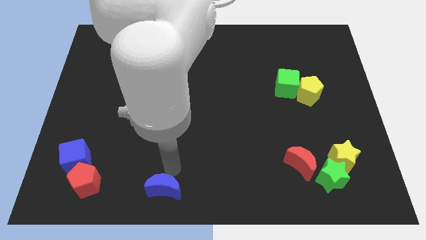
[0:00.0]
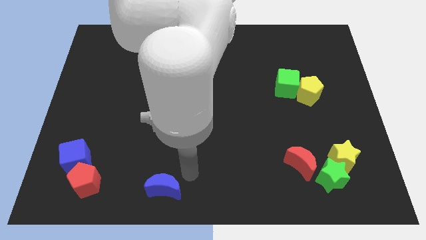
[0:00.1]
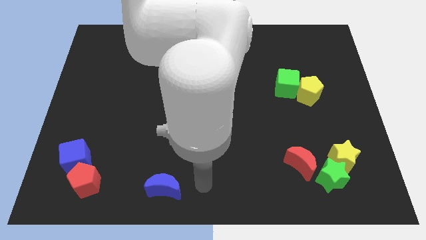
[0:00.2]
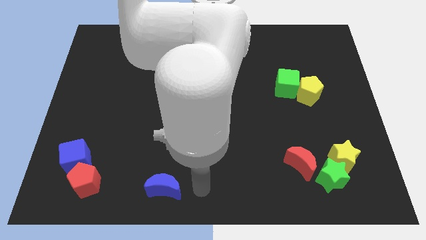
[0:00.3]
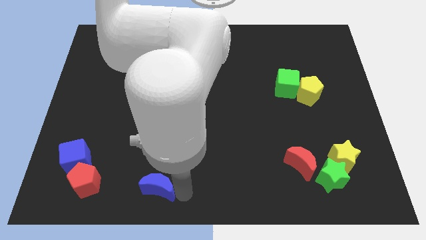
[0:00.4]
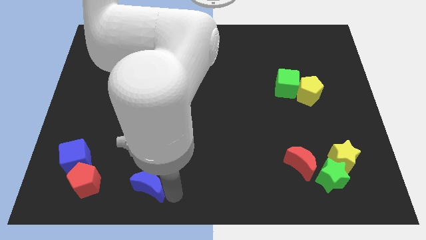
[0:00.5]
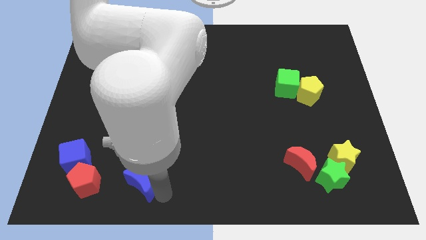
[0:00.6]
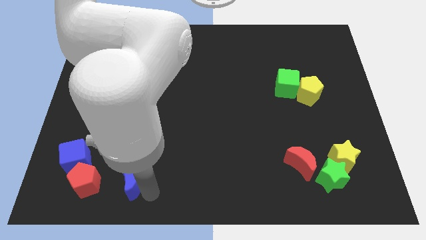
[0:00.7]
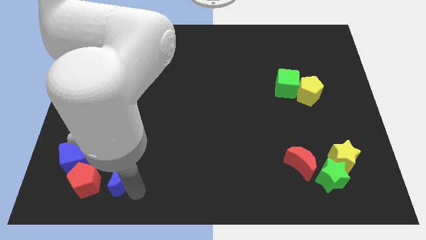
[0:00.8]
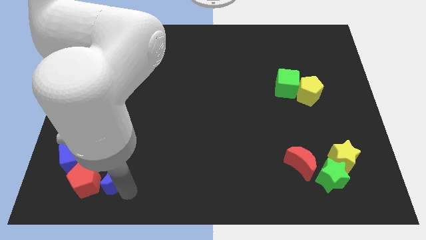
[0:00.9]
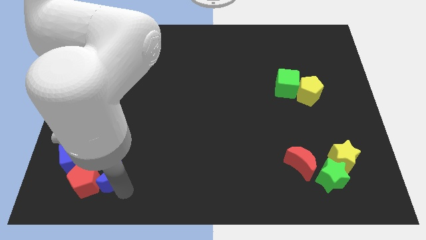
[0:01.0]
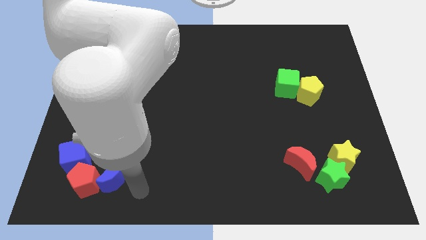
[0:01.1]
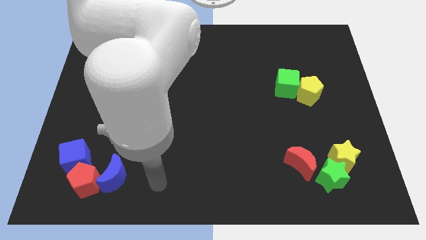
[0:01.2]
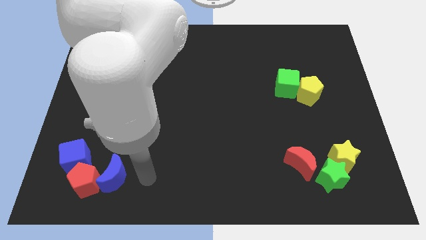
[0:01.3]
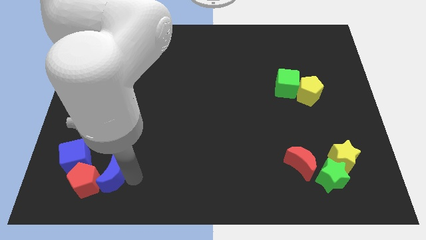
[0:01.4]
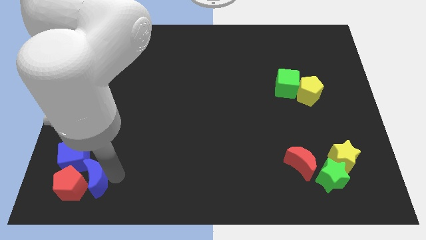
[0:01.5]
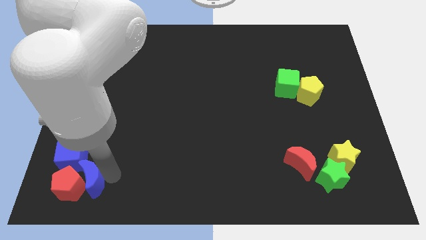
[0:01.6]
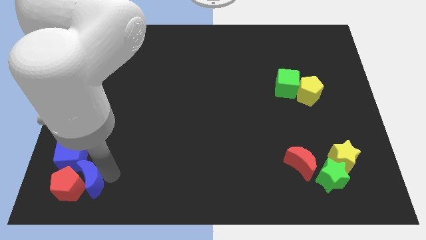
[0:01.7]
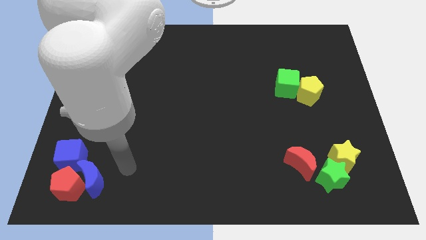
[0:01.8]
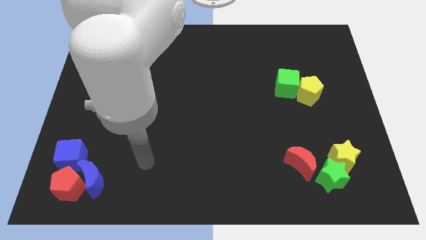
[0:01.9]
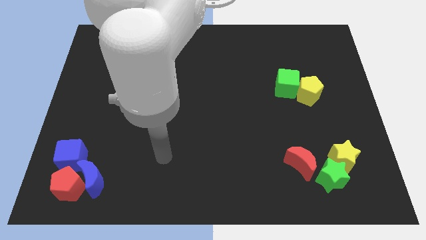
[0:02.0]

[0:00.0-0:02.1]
push the blue crescent into red pentagon at the bottom left

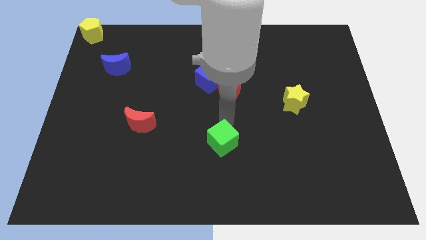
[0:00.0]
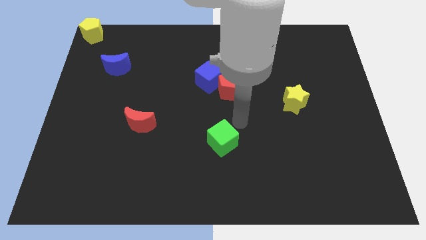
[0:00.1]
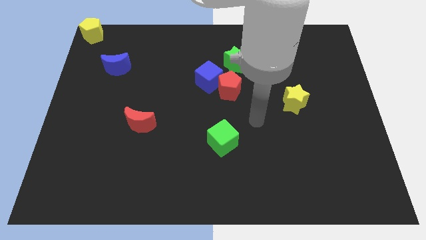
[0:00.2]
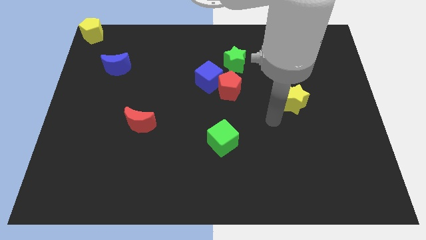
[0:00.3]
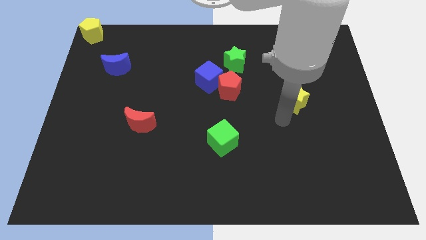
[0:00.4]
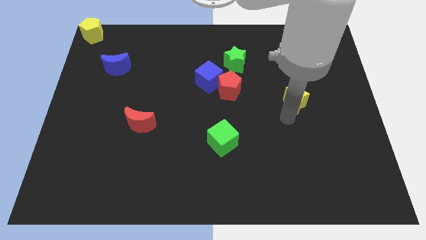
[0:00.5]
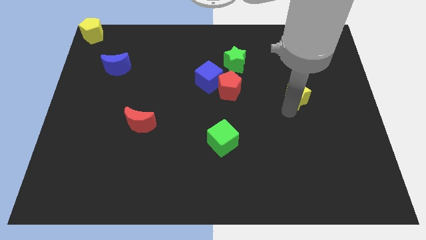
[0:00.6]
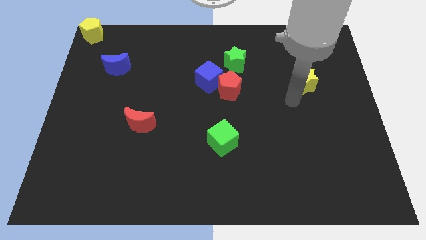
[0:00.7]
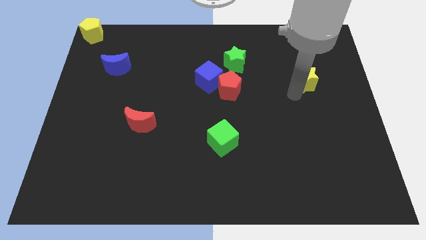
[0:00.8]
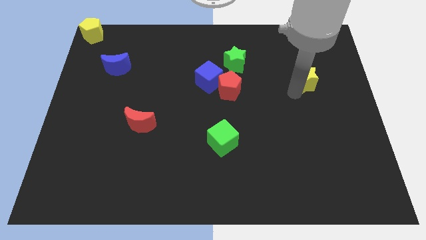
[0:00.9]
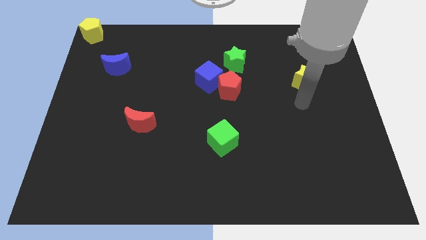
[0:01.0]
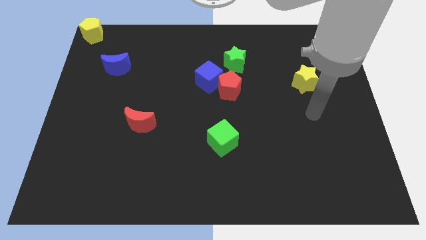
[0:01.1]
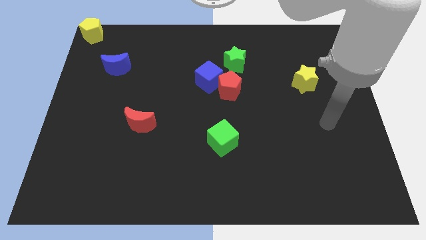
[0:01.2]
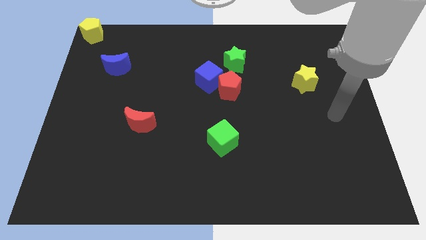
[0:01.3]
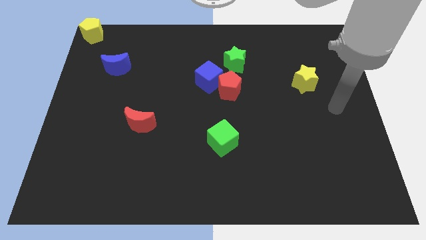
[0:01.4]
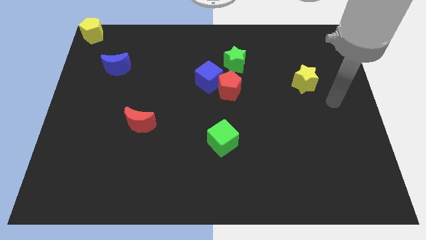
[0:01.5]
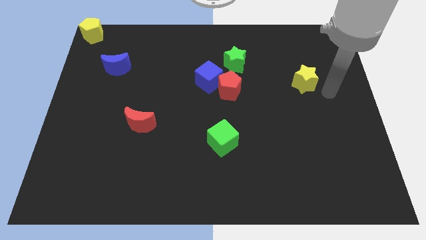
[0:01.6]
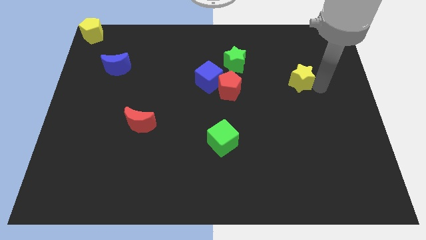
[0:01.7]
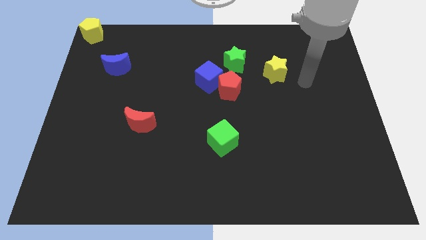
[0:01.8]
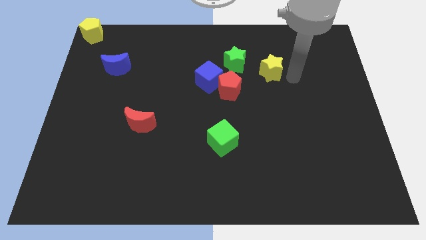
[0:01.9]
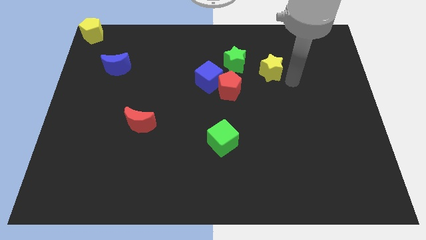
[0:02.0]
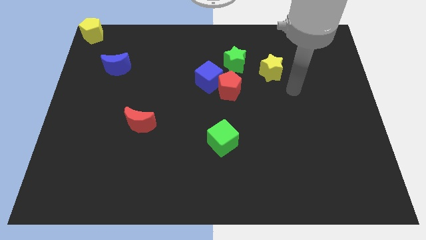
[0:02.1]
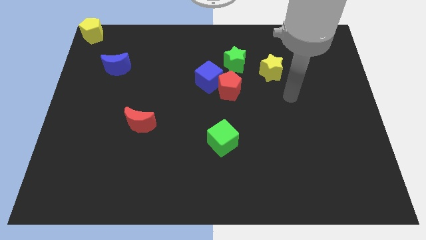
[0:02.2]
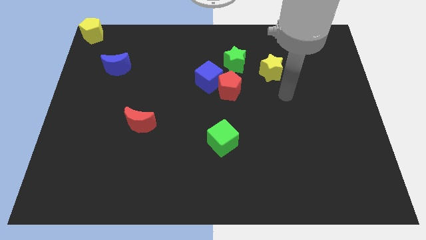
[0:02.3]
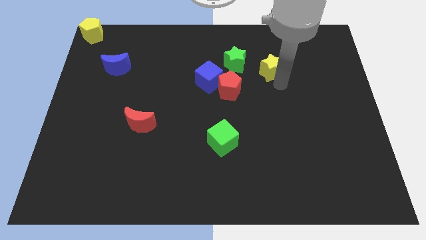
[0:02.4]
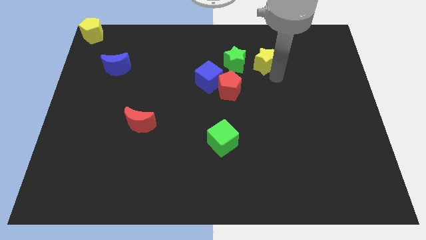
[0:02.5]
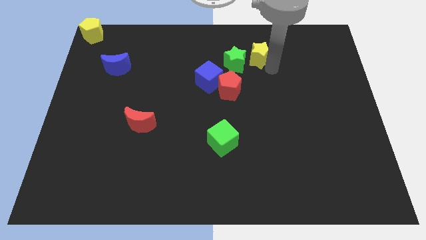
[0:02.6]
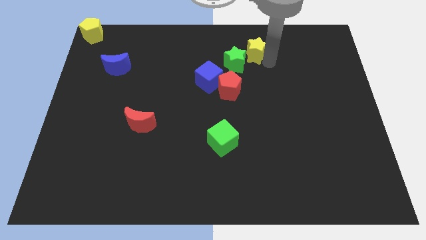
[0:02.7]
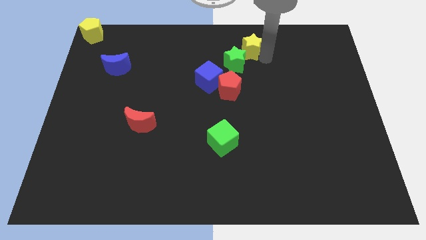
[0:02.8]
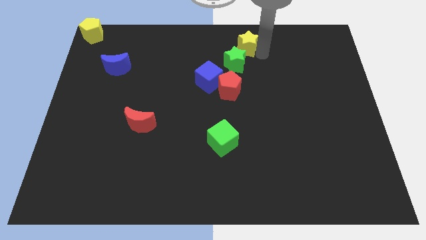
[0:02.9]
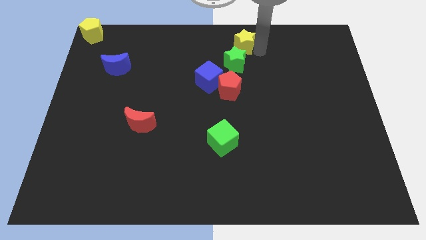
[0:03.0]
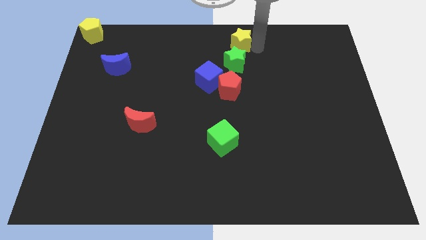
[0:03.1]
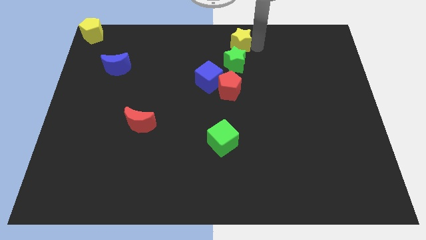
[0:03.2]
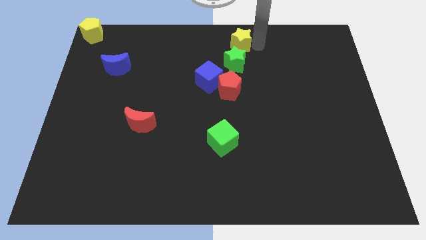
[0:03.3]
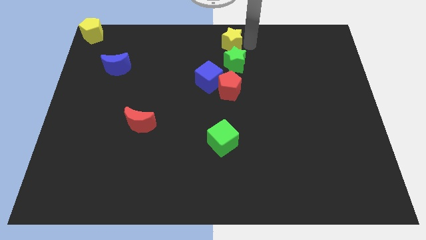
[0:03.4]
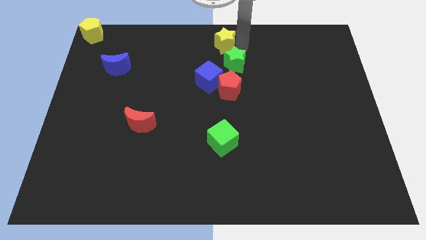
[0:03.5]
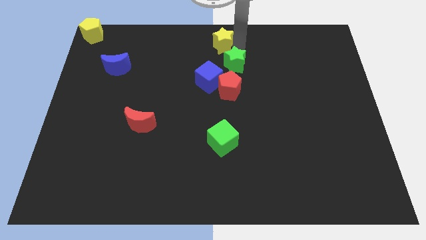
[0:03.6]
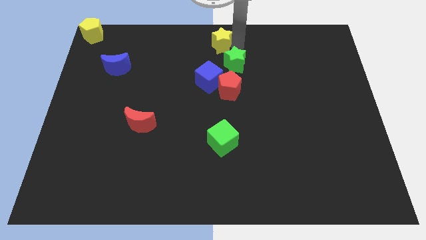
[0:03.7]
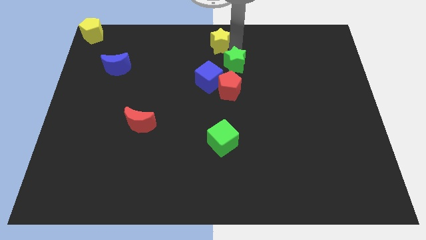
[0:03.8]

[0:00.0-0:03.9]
place the yellow star at the top center of the board

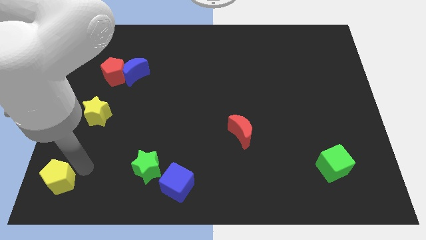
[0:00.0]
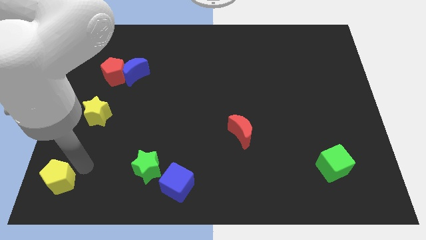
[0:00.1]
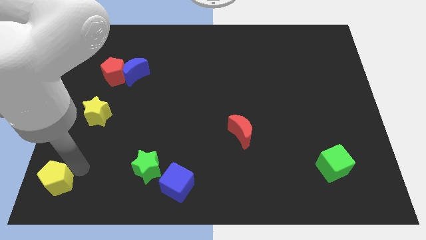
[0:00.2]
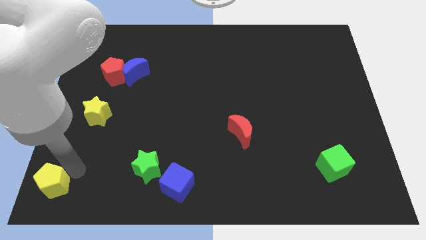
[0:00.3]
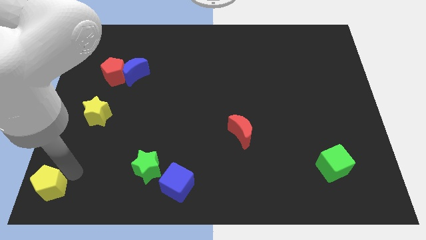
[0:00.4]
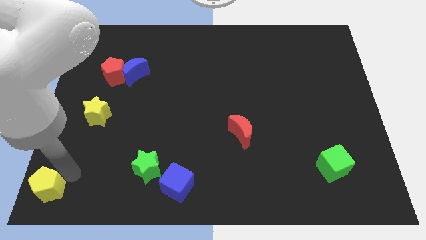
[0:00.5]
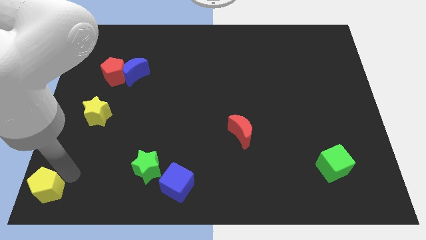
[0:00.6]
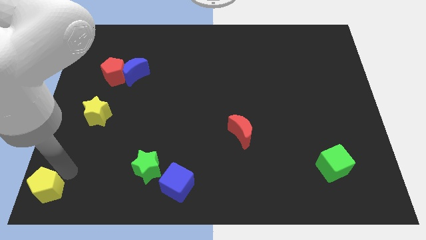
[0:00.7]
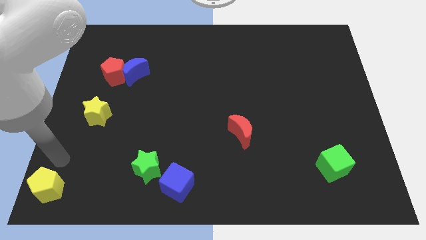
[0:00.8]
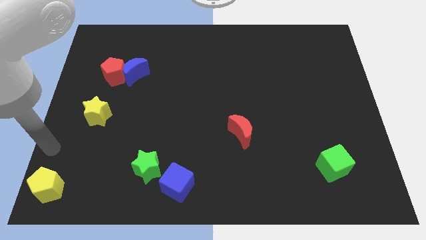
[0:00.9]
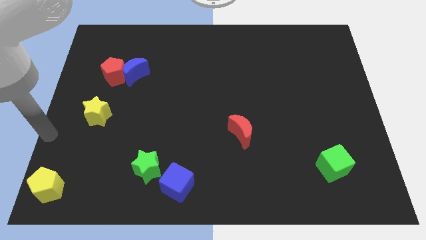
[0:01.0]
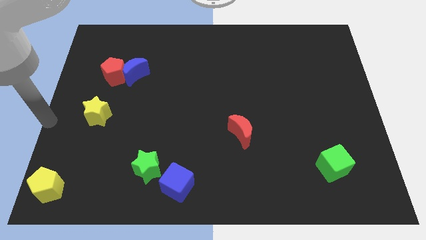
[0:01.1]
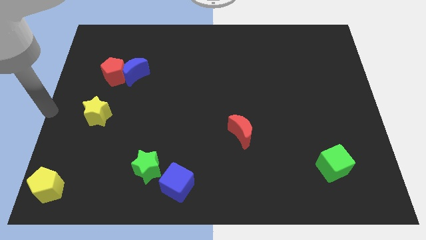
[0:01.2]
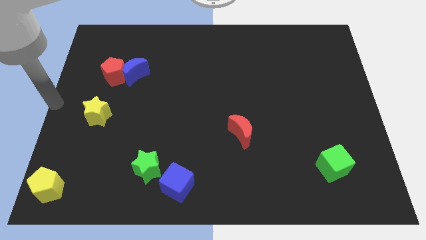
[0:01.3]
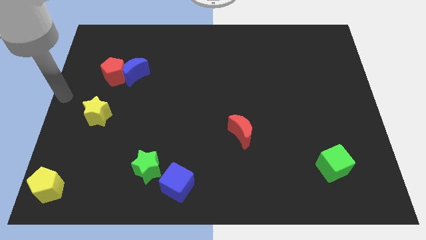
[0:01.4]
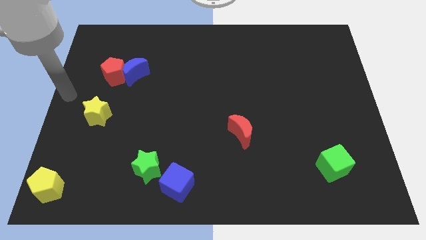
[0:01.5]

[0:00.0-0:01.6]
move yourself away from the yellow pentagon

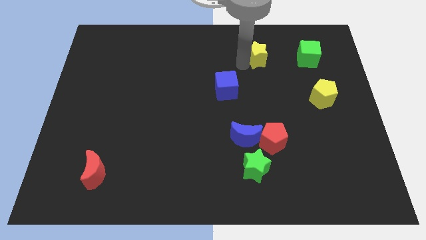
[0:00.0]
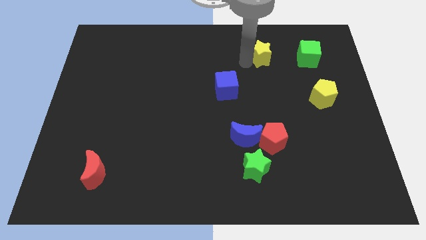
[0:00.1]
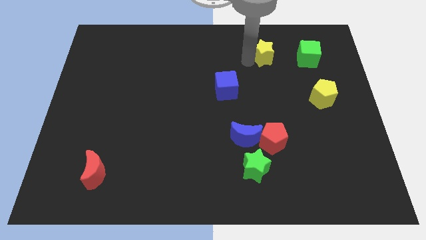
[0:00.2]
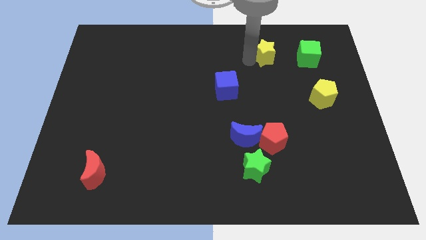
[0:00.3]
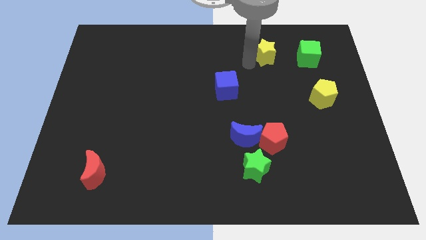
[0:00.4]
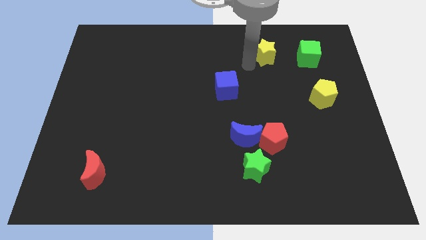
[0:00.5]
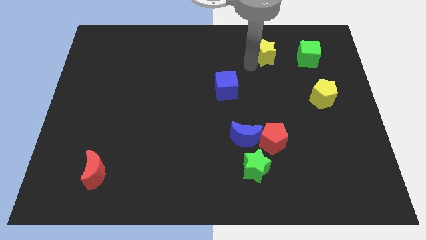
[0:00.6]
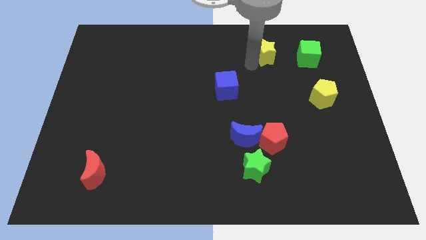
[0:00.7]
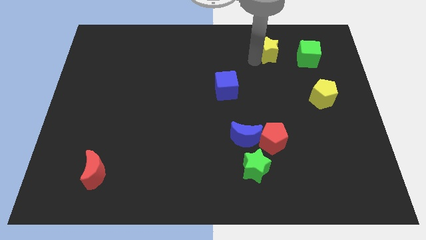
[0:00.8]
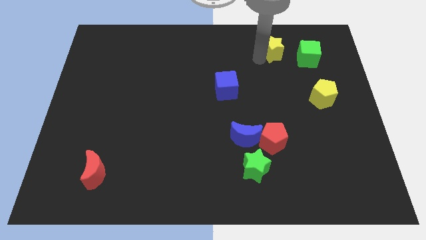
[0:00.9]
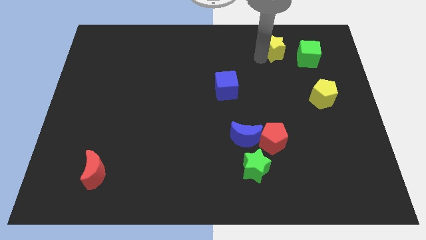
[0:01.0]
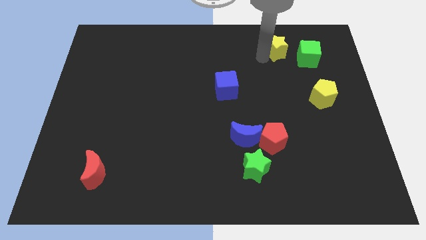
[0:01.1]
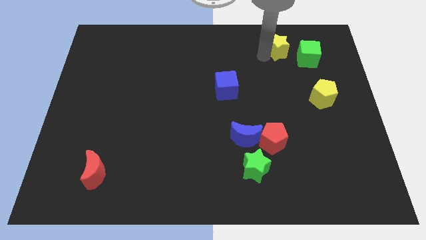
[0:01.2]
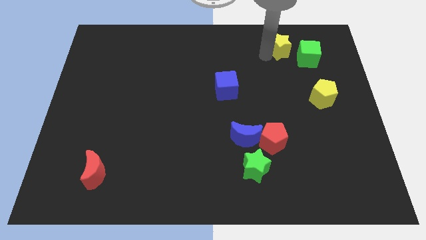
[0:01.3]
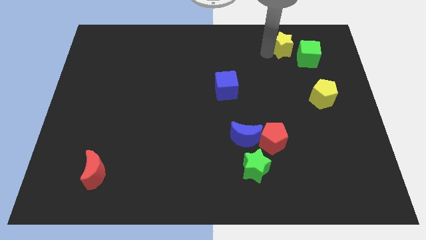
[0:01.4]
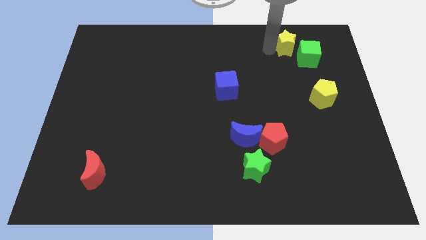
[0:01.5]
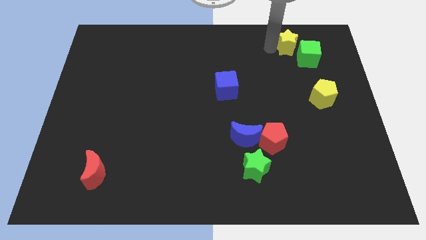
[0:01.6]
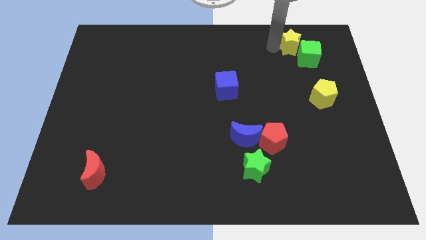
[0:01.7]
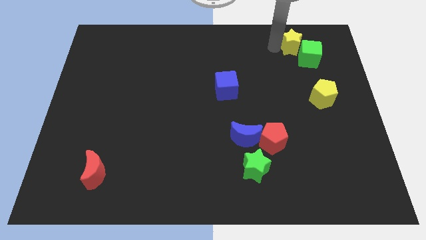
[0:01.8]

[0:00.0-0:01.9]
push the yellow star to the top left side of the green cube
